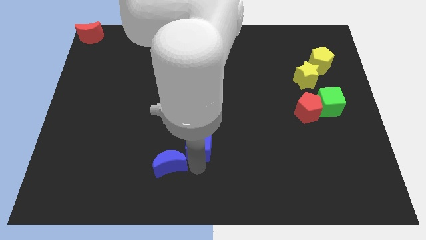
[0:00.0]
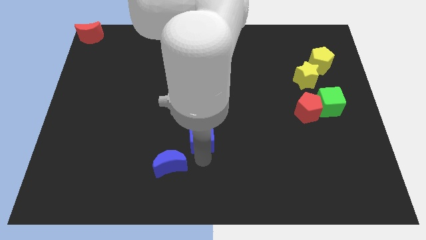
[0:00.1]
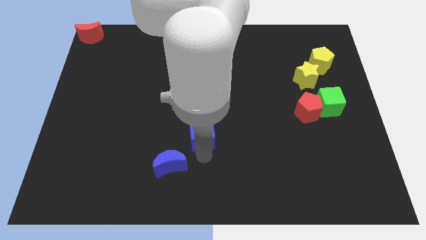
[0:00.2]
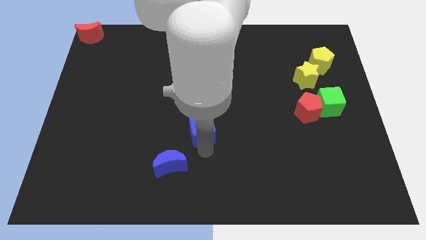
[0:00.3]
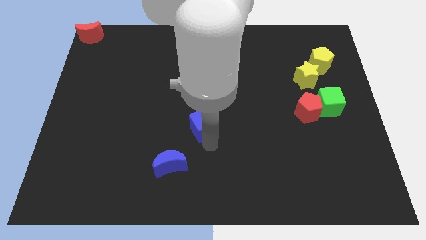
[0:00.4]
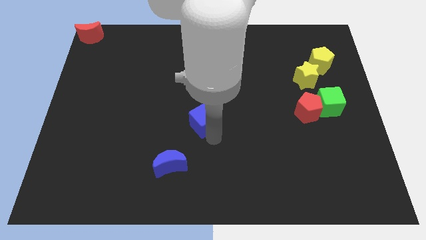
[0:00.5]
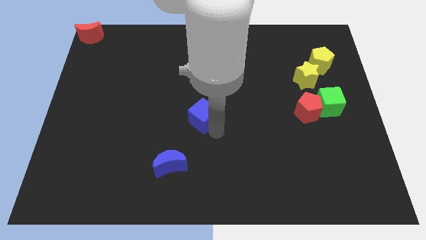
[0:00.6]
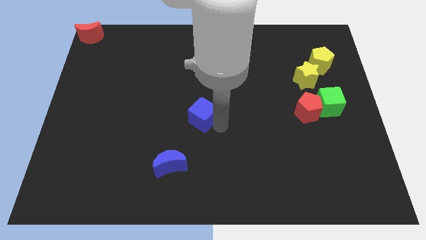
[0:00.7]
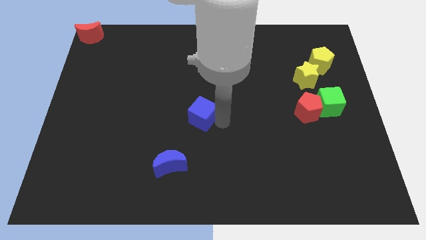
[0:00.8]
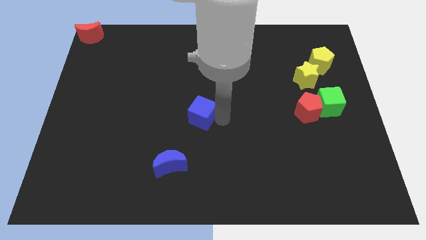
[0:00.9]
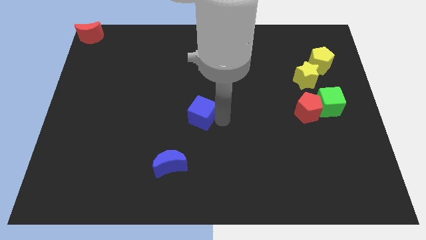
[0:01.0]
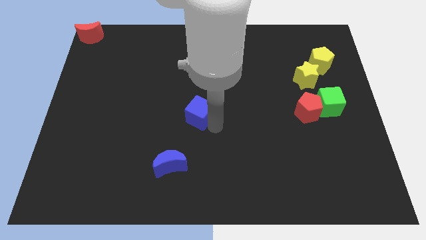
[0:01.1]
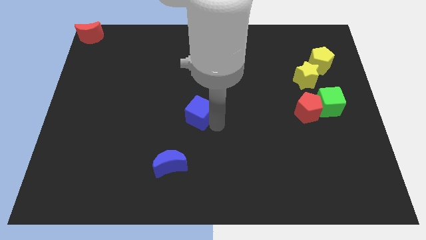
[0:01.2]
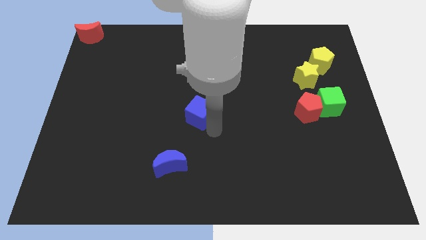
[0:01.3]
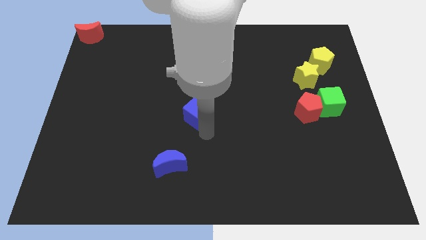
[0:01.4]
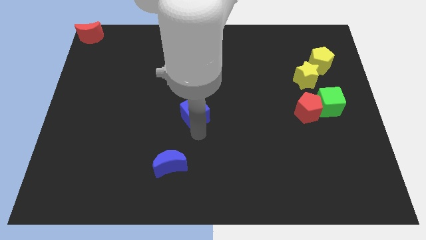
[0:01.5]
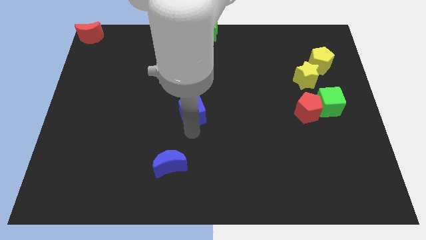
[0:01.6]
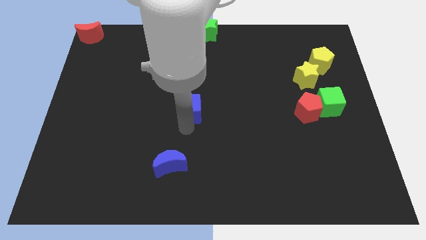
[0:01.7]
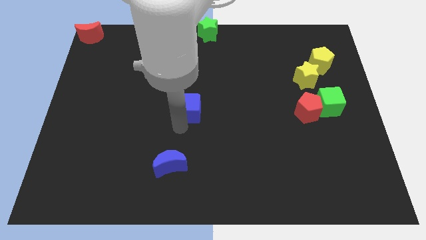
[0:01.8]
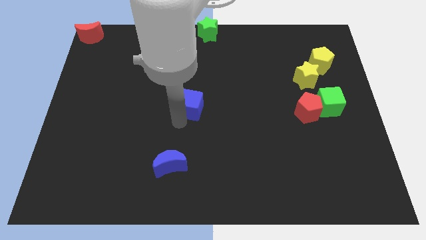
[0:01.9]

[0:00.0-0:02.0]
move the blue cube away from the blue moon

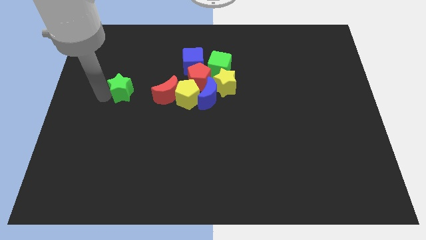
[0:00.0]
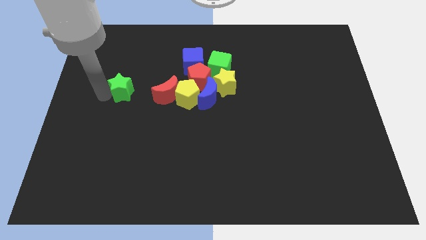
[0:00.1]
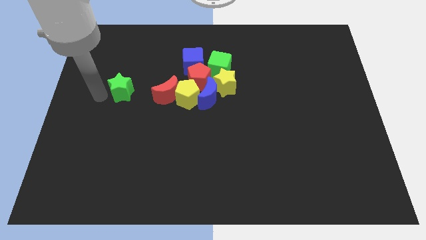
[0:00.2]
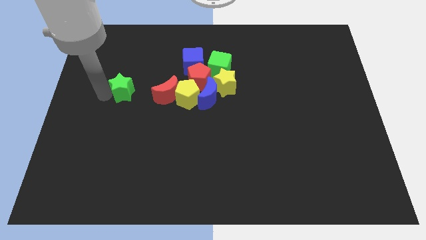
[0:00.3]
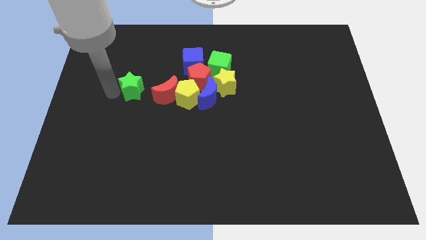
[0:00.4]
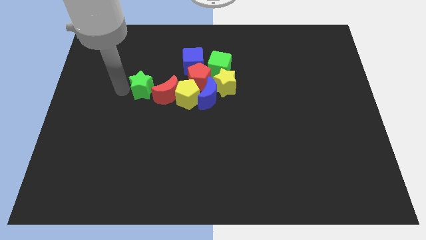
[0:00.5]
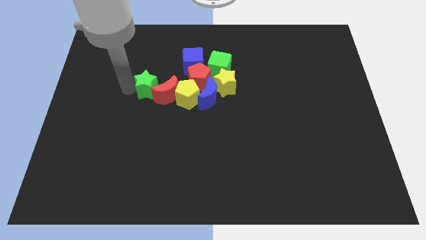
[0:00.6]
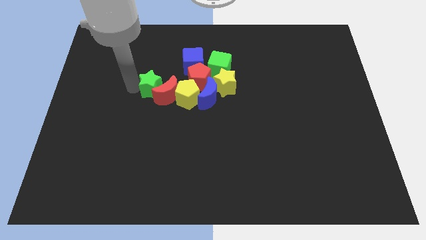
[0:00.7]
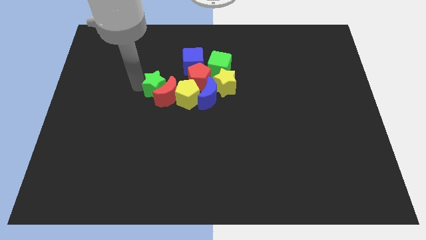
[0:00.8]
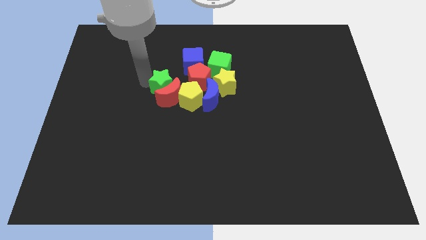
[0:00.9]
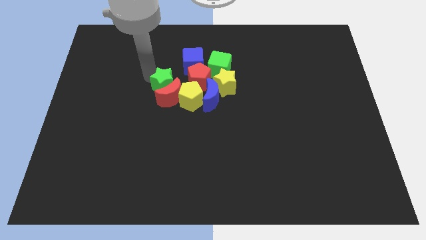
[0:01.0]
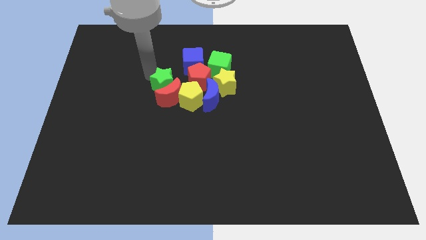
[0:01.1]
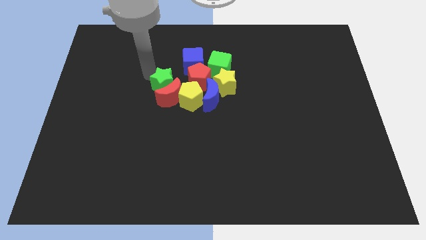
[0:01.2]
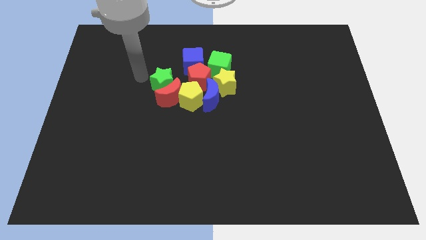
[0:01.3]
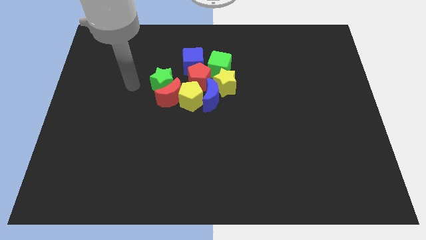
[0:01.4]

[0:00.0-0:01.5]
push the green star into the red crescent

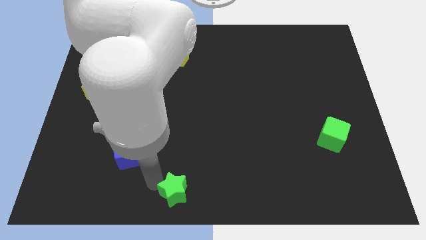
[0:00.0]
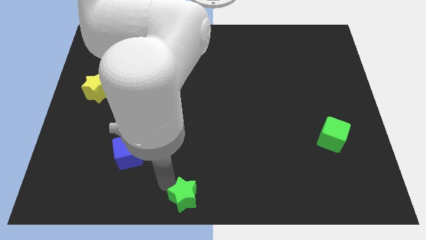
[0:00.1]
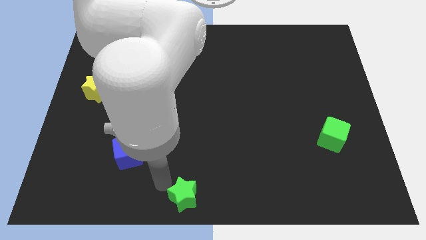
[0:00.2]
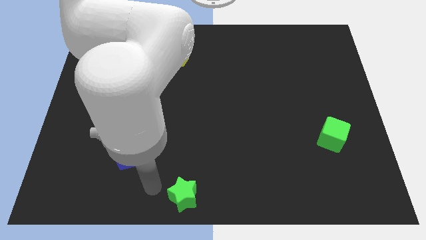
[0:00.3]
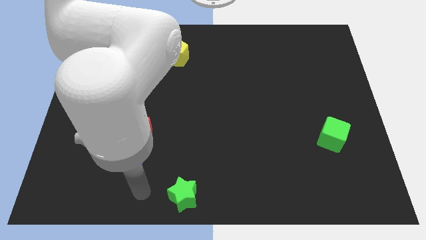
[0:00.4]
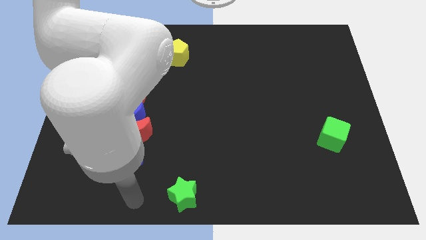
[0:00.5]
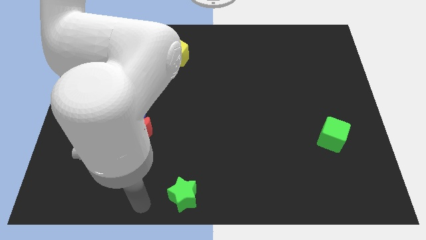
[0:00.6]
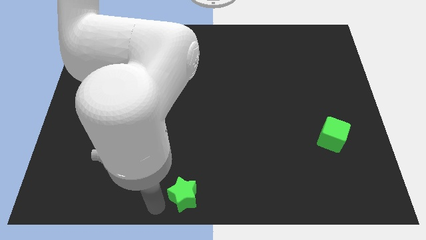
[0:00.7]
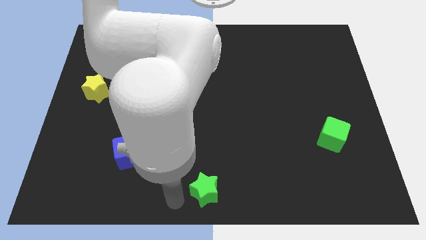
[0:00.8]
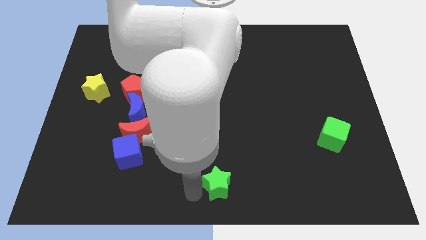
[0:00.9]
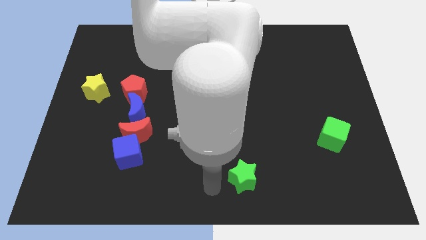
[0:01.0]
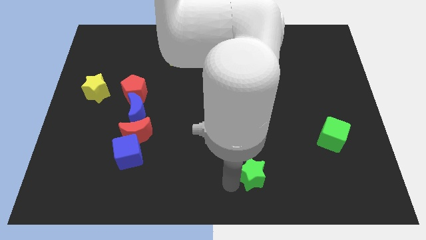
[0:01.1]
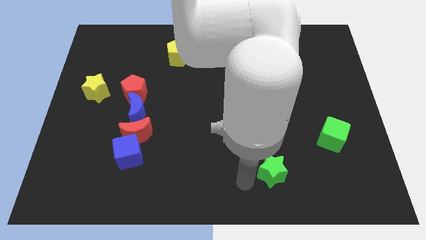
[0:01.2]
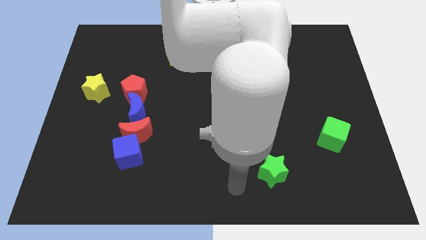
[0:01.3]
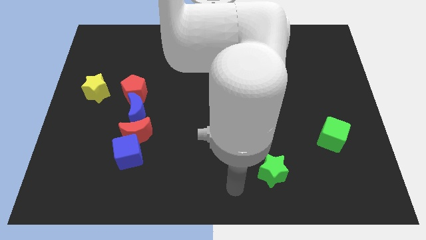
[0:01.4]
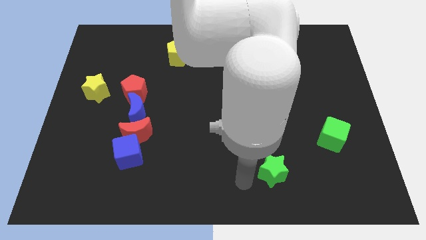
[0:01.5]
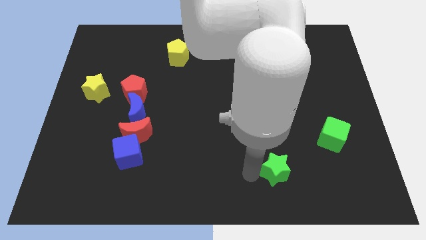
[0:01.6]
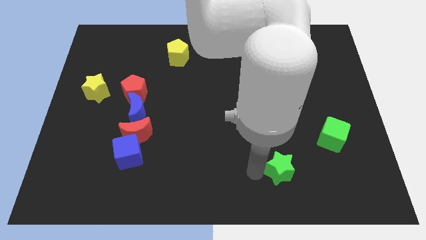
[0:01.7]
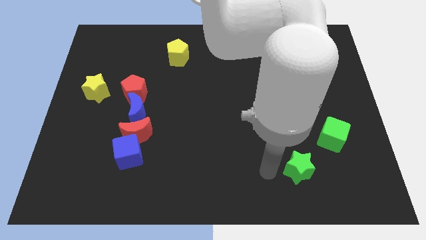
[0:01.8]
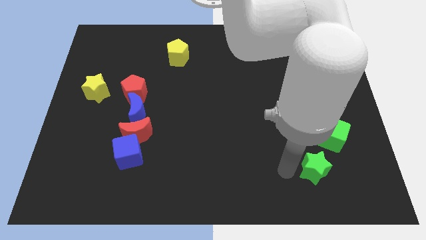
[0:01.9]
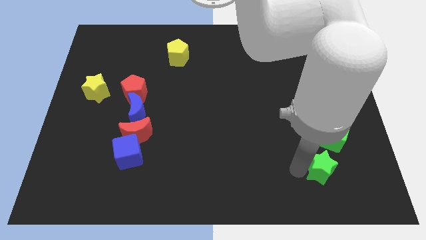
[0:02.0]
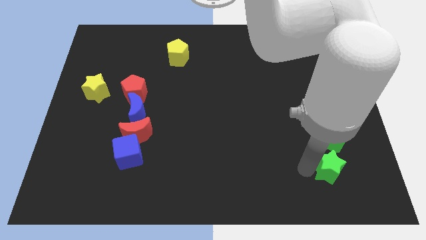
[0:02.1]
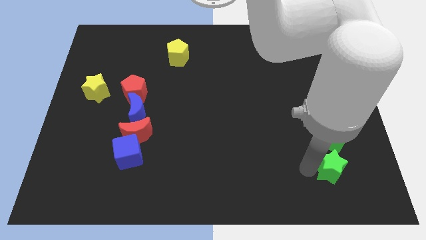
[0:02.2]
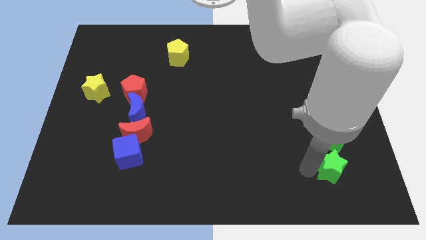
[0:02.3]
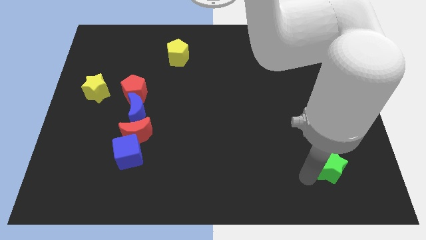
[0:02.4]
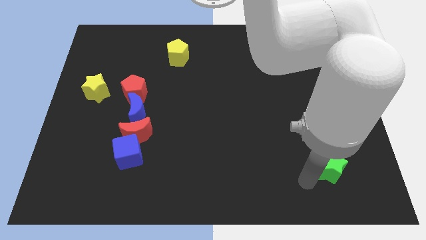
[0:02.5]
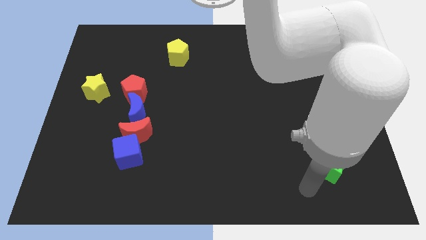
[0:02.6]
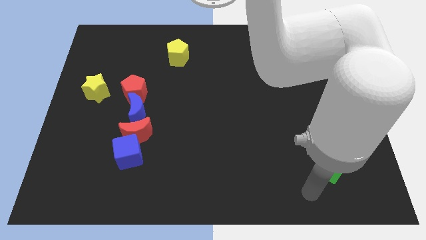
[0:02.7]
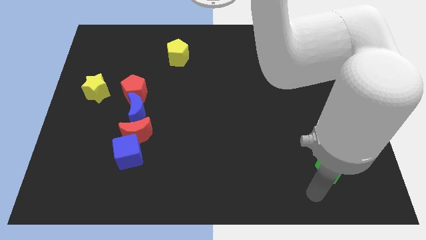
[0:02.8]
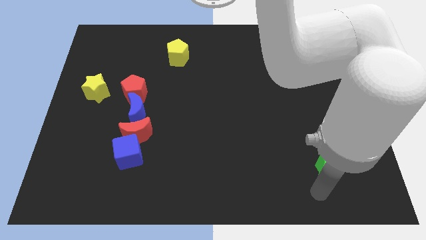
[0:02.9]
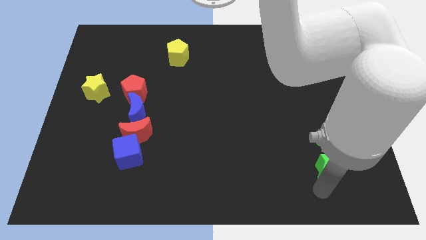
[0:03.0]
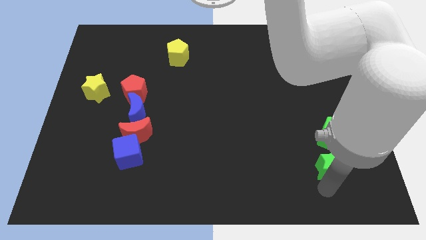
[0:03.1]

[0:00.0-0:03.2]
place the green star below the green cube

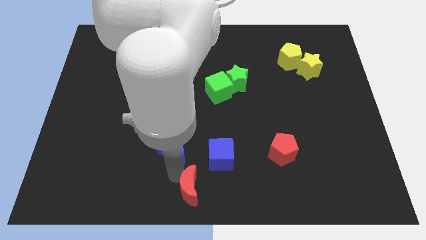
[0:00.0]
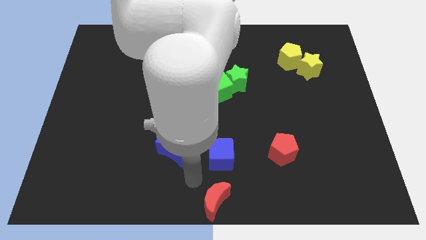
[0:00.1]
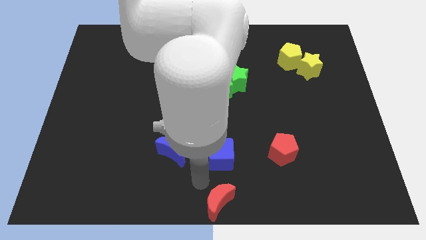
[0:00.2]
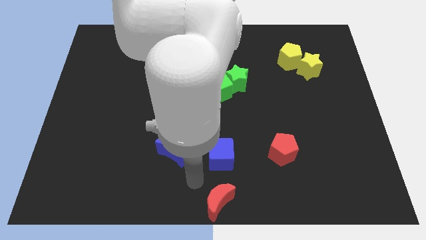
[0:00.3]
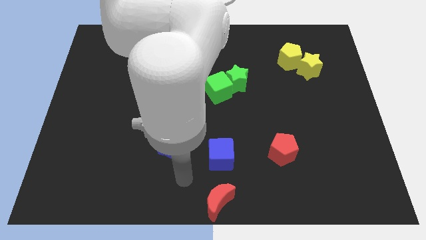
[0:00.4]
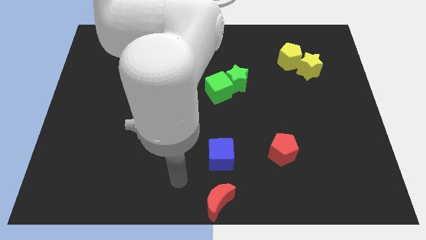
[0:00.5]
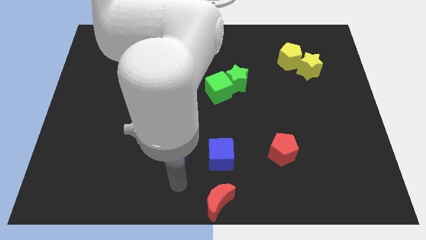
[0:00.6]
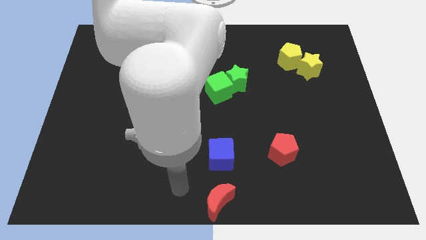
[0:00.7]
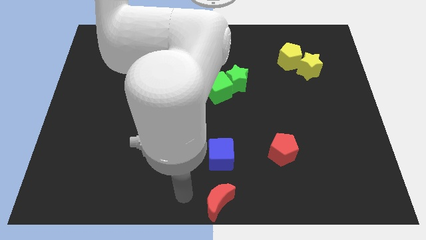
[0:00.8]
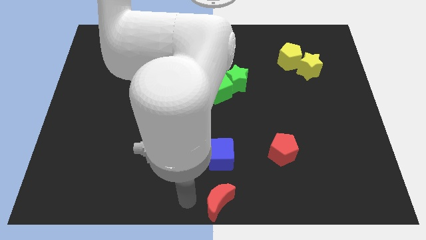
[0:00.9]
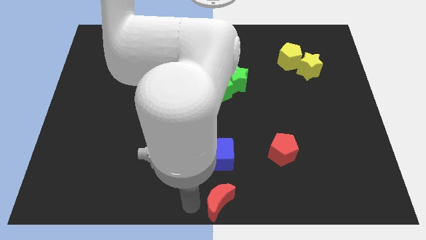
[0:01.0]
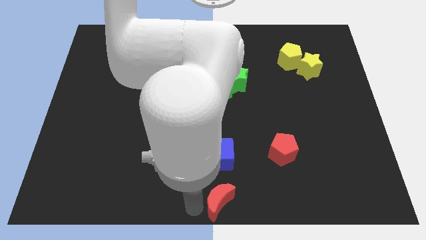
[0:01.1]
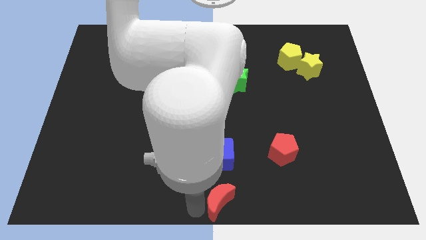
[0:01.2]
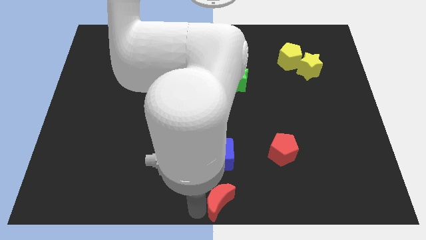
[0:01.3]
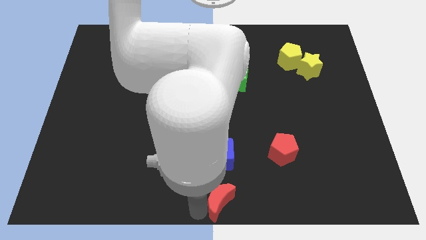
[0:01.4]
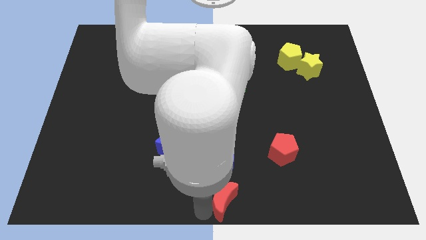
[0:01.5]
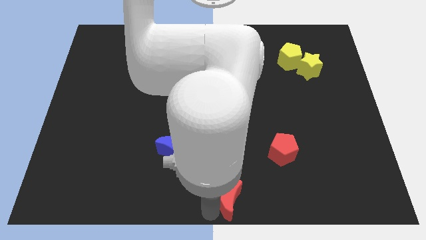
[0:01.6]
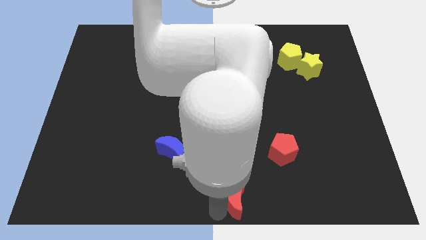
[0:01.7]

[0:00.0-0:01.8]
push the red crescent to the bottom center

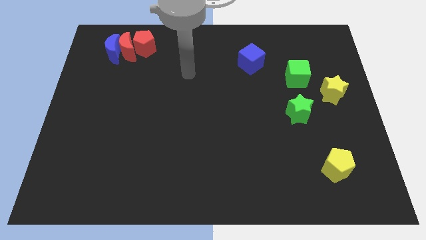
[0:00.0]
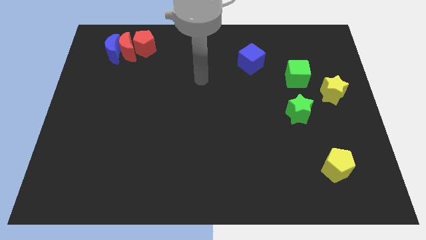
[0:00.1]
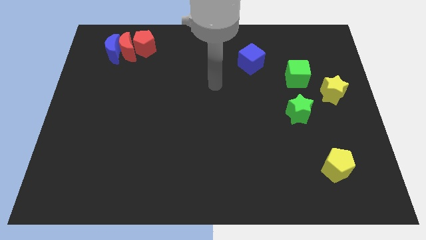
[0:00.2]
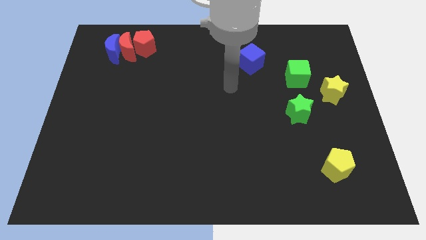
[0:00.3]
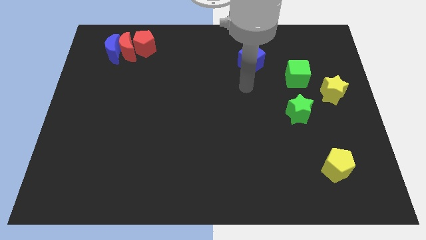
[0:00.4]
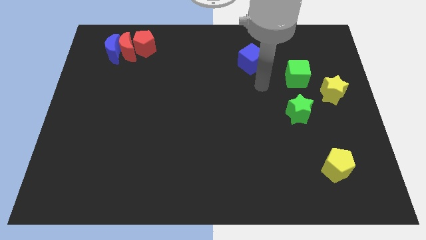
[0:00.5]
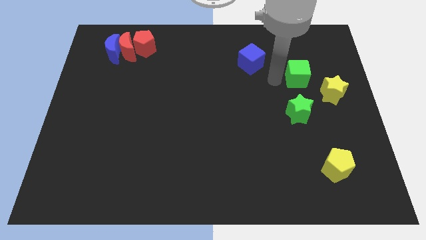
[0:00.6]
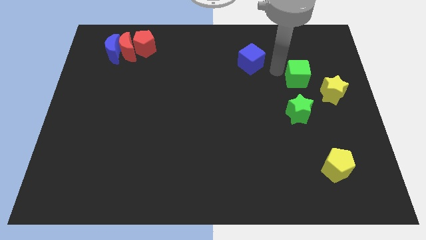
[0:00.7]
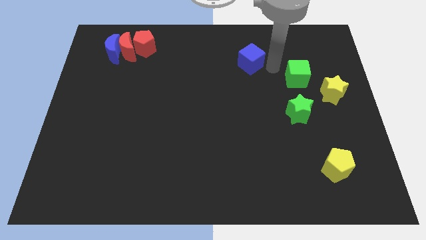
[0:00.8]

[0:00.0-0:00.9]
place arm on the right side of blue cube
